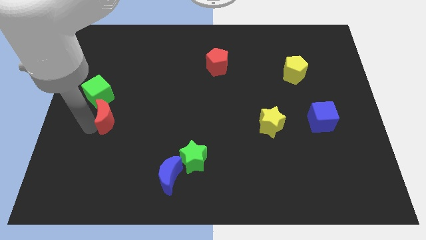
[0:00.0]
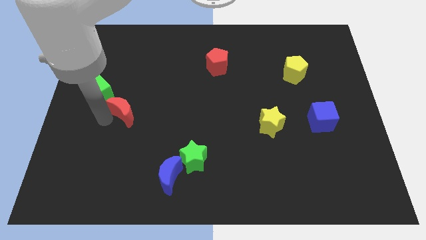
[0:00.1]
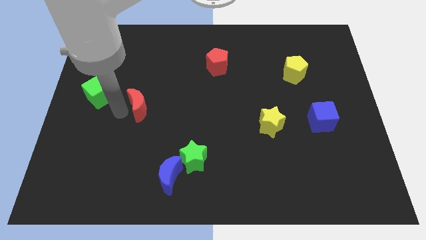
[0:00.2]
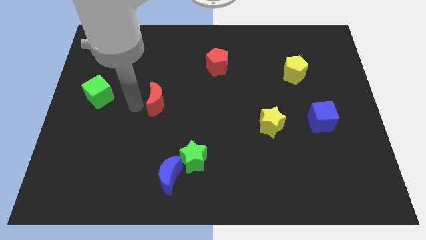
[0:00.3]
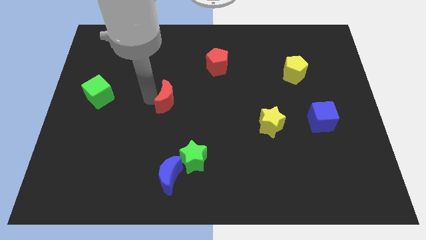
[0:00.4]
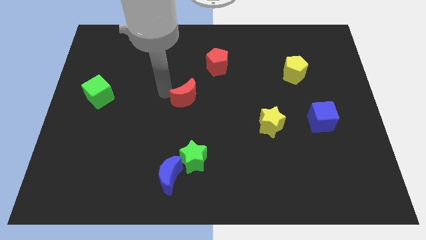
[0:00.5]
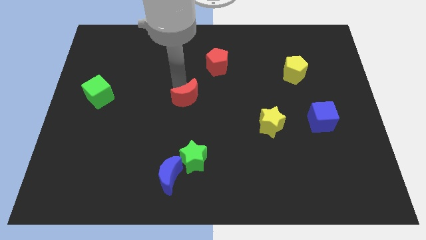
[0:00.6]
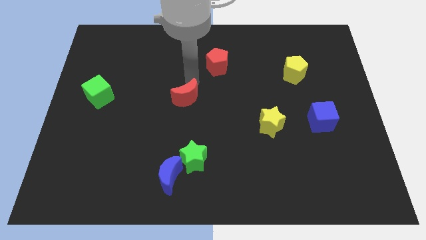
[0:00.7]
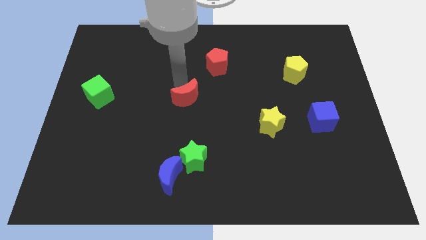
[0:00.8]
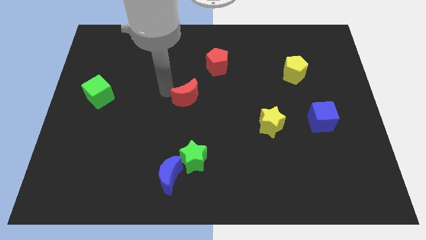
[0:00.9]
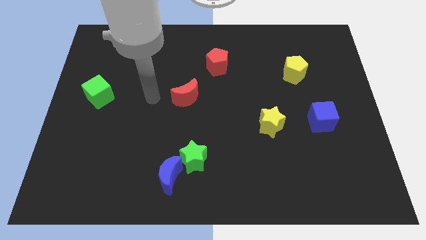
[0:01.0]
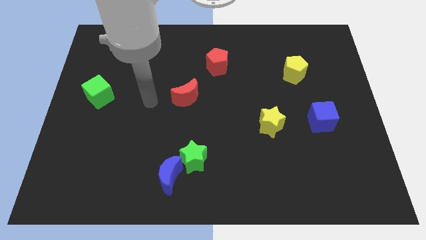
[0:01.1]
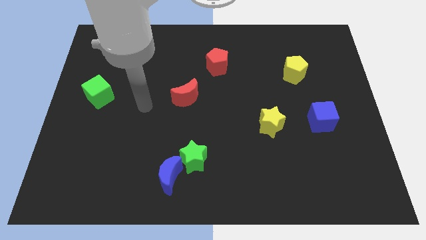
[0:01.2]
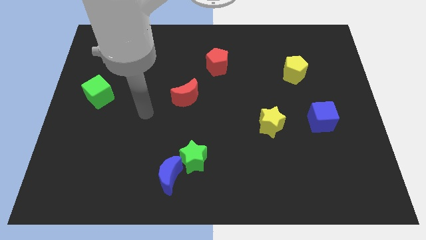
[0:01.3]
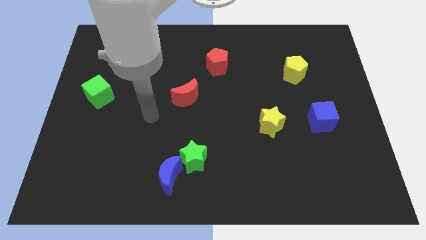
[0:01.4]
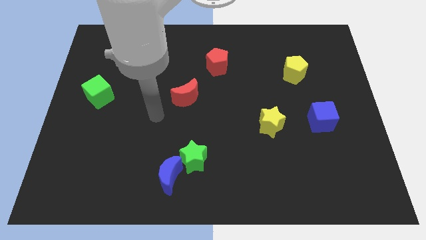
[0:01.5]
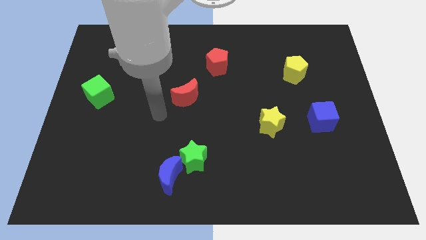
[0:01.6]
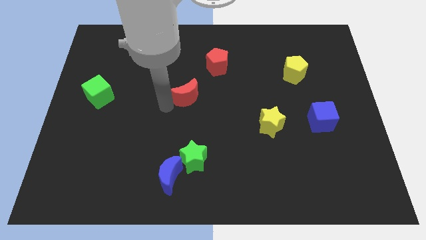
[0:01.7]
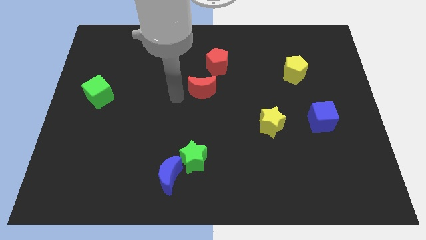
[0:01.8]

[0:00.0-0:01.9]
move the red crescent below the red pentagon

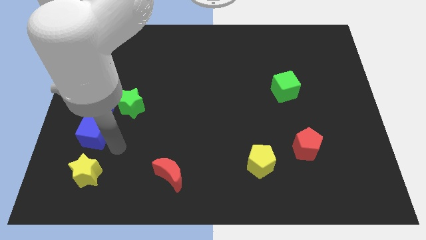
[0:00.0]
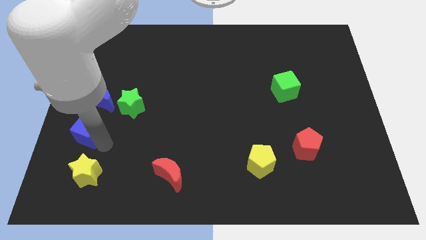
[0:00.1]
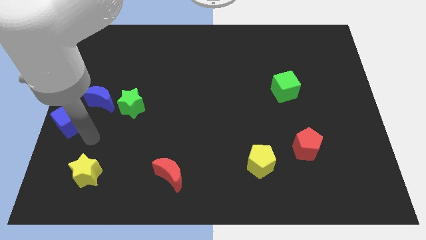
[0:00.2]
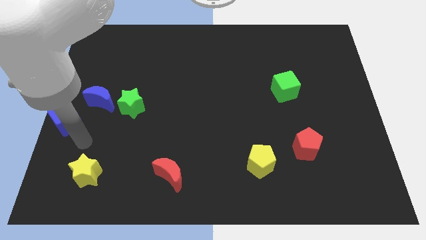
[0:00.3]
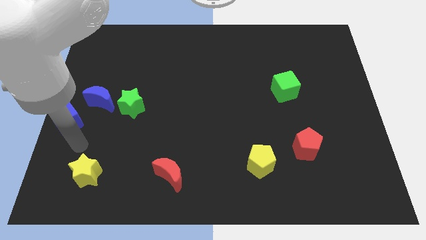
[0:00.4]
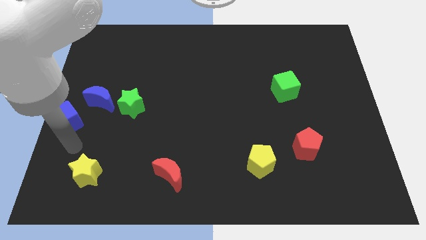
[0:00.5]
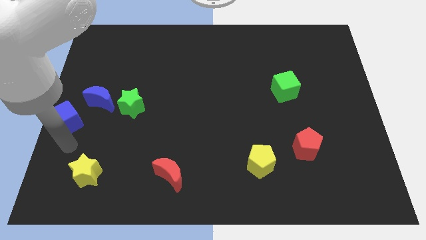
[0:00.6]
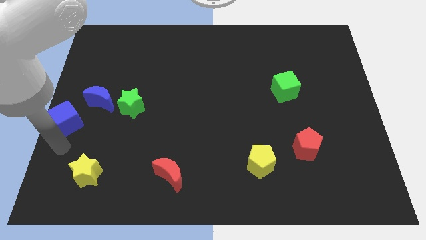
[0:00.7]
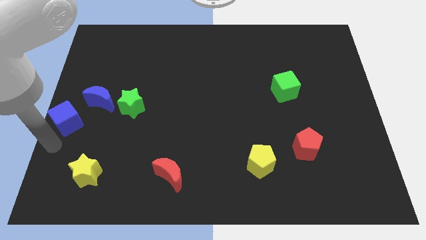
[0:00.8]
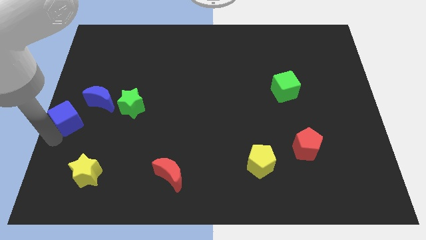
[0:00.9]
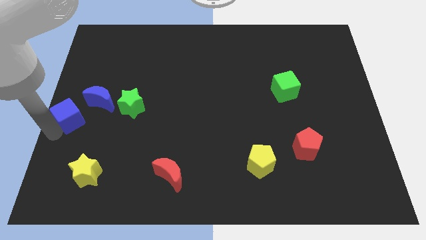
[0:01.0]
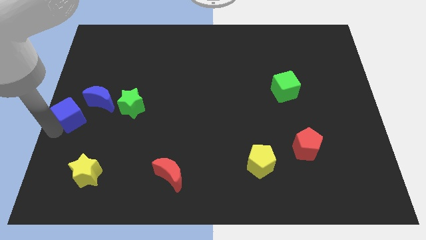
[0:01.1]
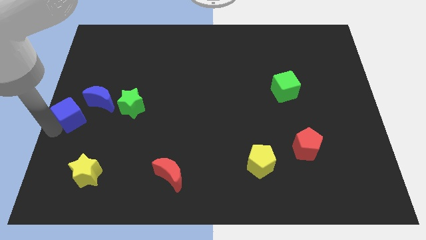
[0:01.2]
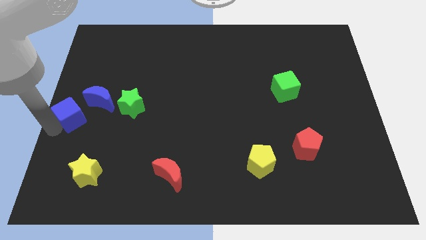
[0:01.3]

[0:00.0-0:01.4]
slide the blue cube towards the center left side of the board

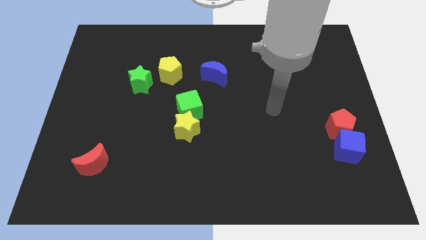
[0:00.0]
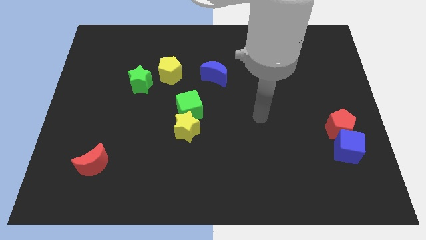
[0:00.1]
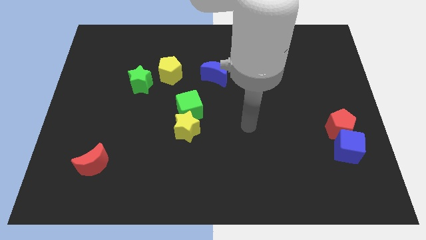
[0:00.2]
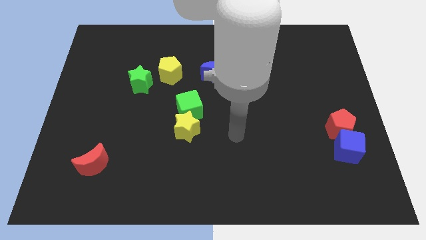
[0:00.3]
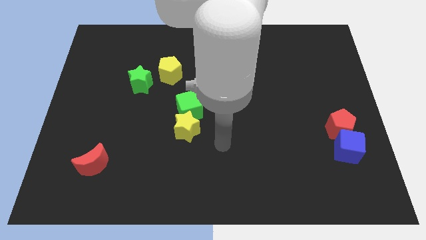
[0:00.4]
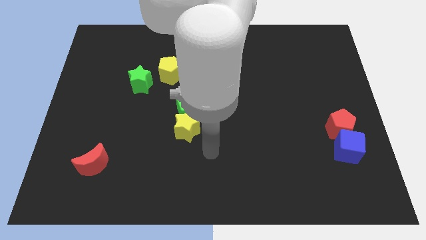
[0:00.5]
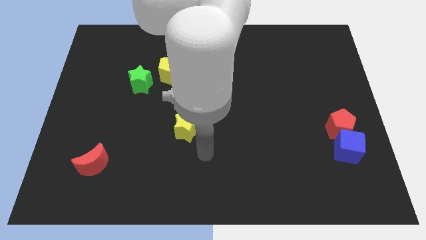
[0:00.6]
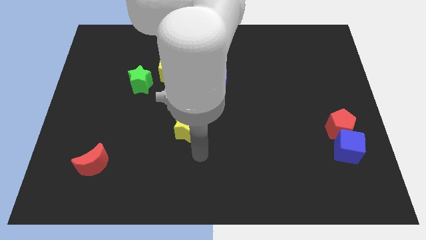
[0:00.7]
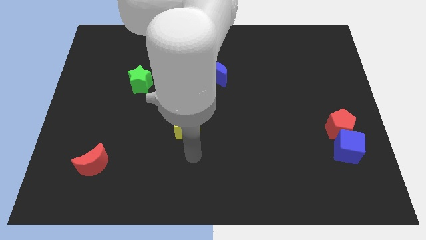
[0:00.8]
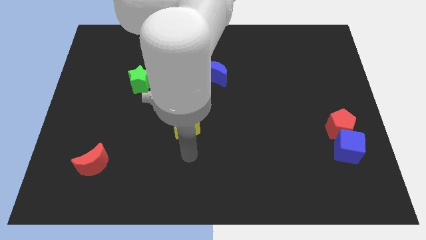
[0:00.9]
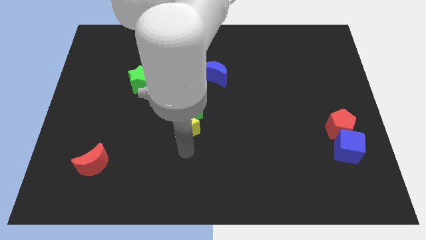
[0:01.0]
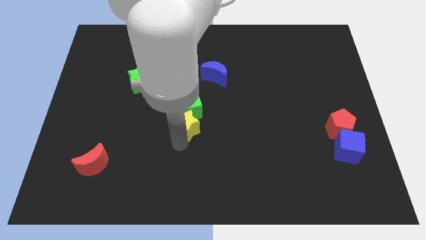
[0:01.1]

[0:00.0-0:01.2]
slide the arm down to the yellow star

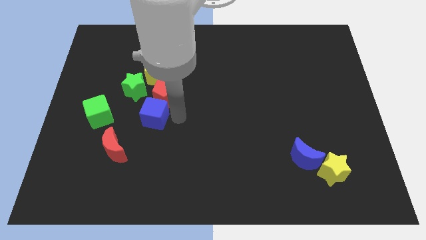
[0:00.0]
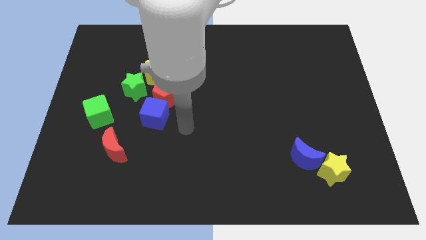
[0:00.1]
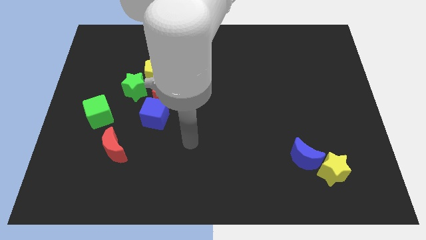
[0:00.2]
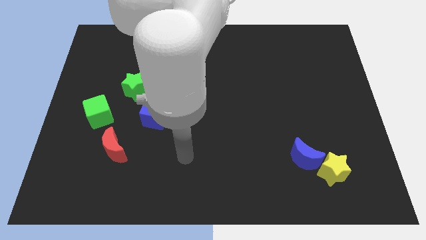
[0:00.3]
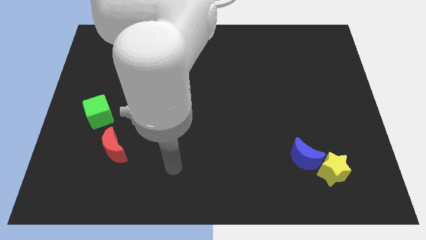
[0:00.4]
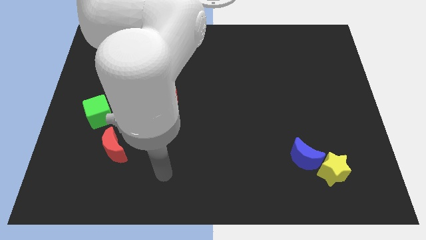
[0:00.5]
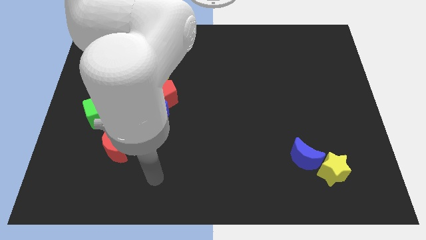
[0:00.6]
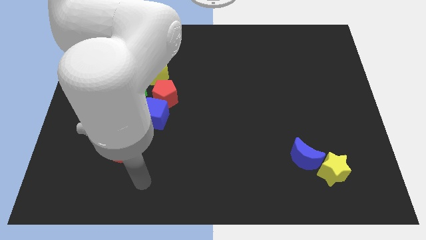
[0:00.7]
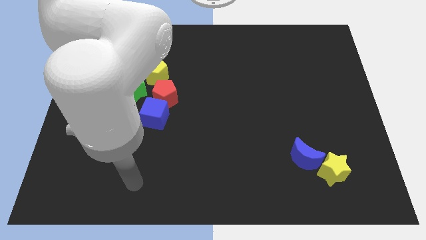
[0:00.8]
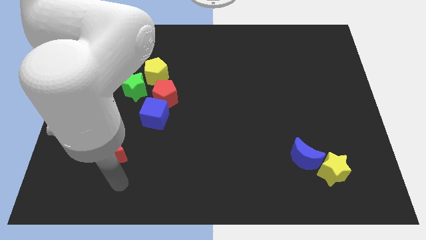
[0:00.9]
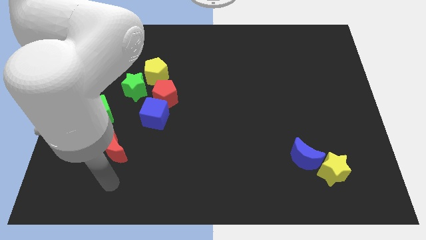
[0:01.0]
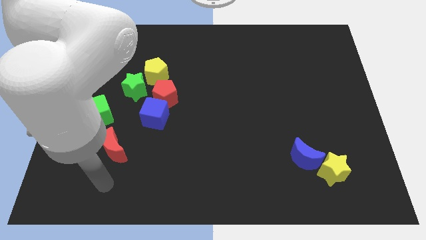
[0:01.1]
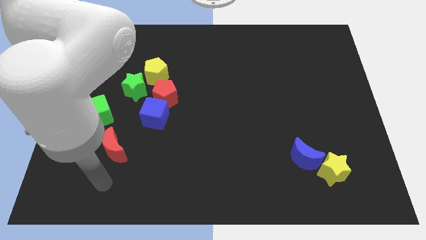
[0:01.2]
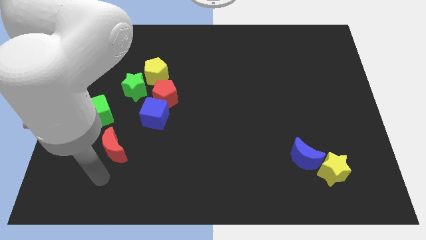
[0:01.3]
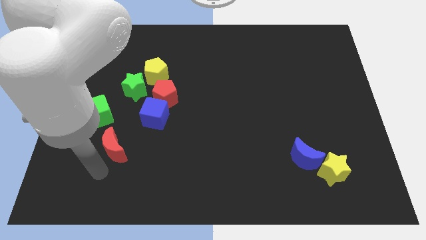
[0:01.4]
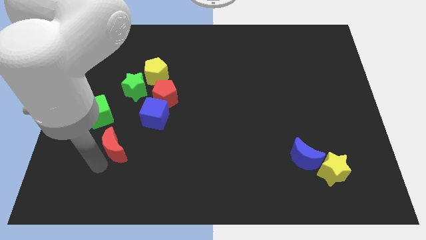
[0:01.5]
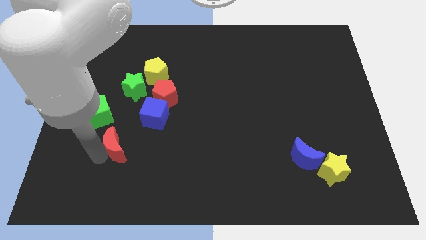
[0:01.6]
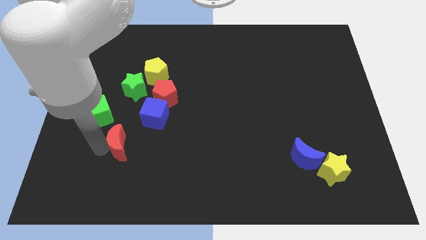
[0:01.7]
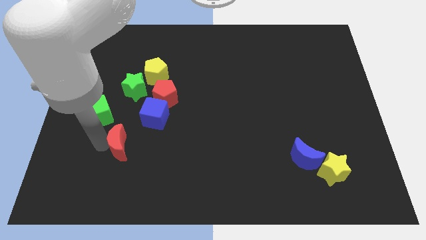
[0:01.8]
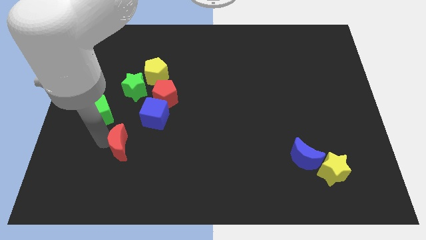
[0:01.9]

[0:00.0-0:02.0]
tap the left side of the red crescent

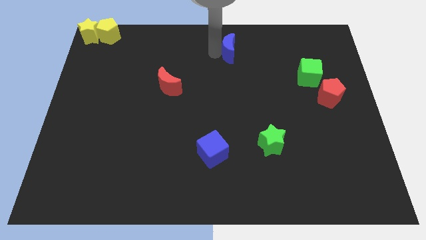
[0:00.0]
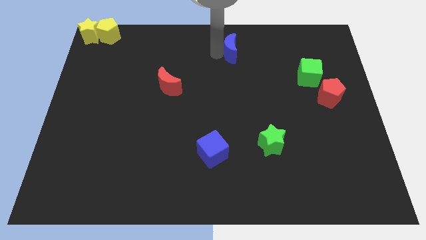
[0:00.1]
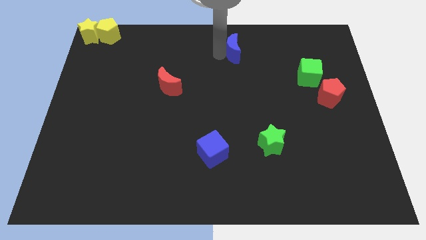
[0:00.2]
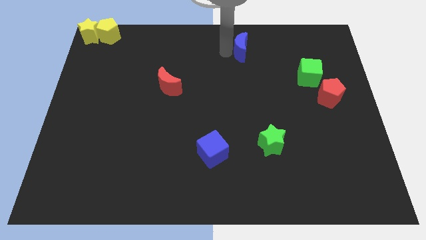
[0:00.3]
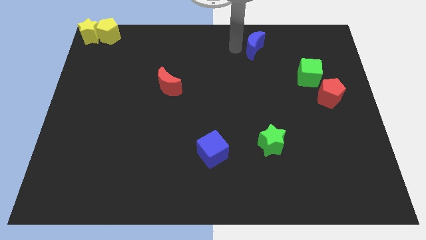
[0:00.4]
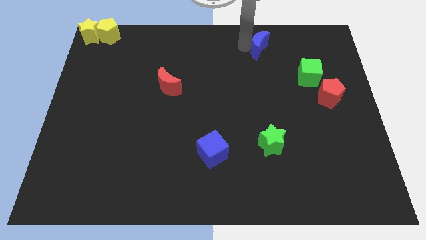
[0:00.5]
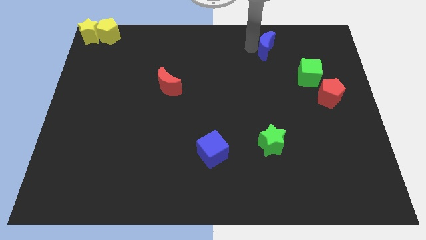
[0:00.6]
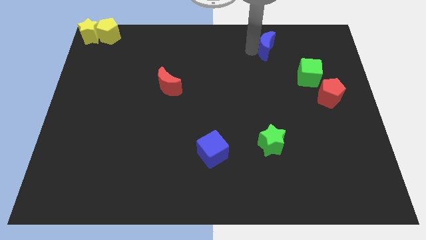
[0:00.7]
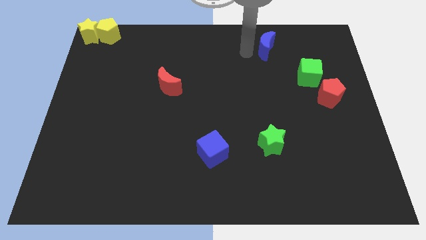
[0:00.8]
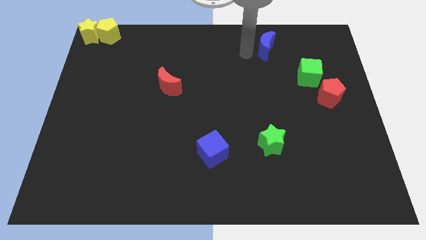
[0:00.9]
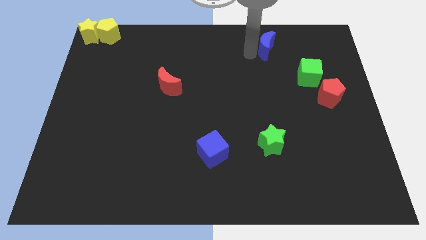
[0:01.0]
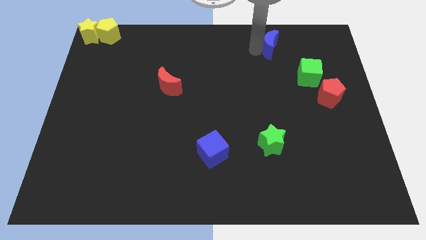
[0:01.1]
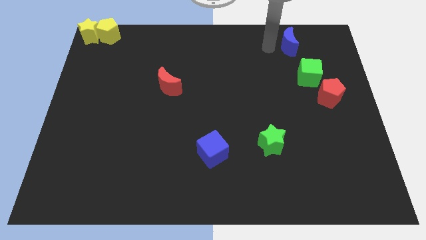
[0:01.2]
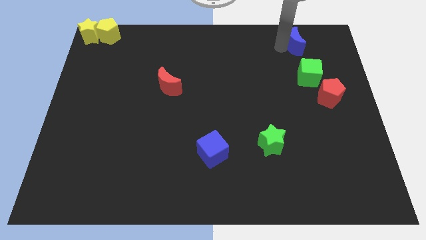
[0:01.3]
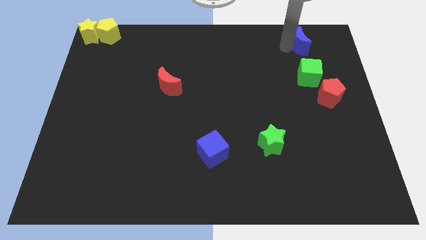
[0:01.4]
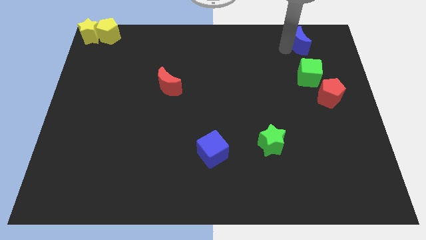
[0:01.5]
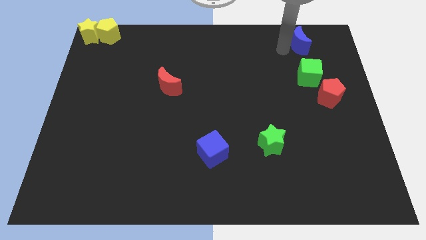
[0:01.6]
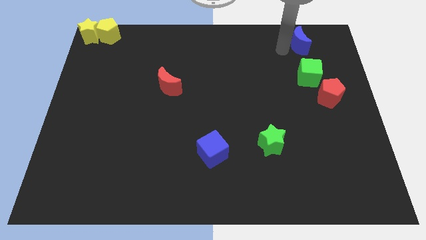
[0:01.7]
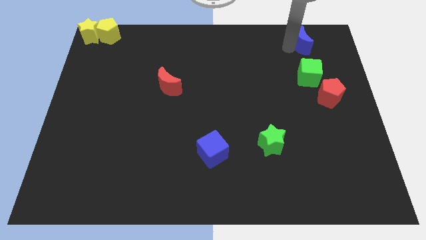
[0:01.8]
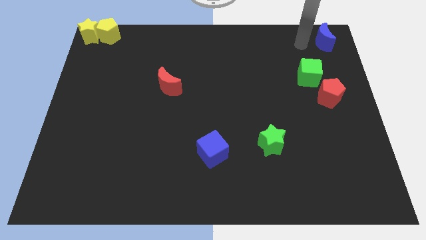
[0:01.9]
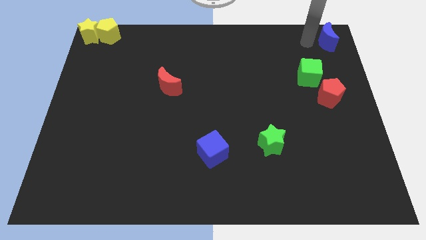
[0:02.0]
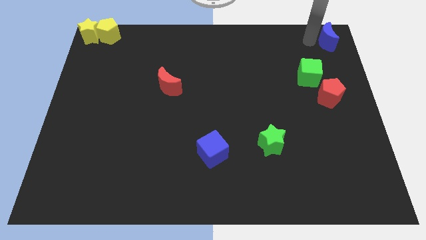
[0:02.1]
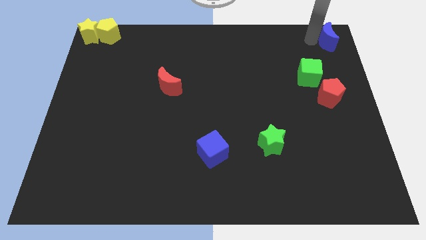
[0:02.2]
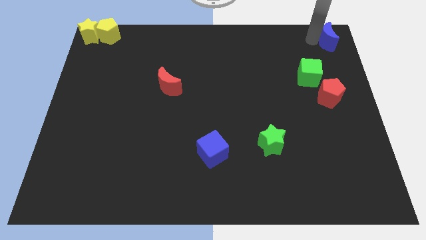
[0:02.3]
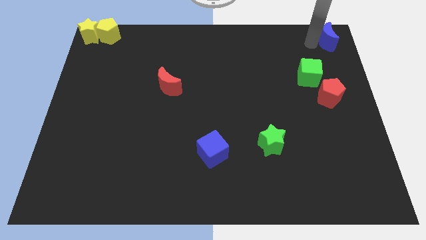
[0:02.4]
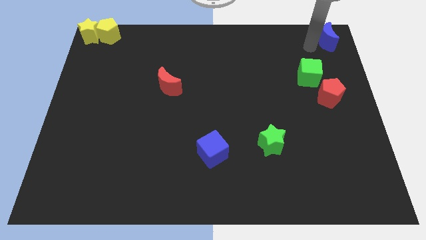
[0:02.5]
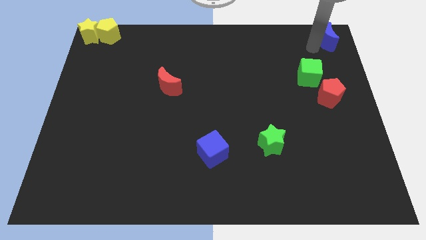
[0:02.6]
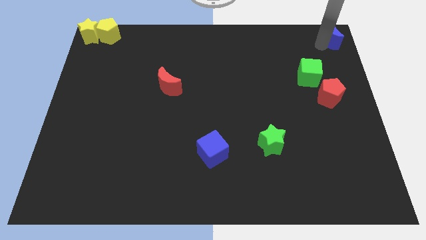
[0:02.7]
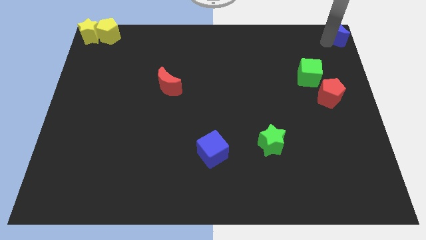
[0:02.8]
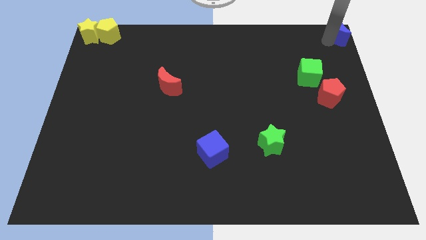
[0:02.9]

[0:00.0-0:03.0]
drag the blue moon to the top right of the board
